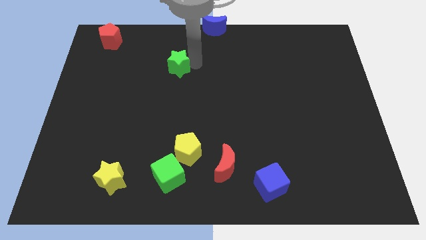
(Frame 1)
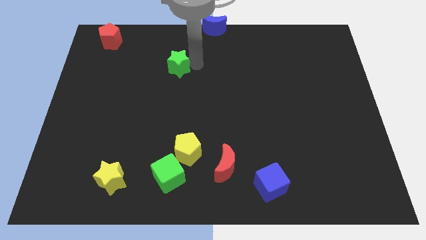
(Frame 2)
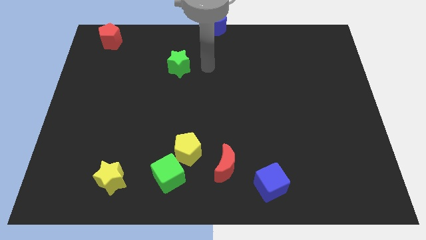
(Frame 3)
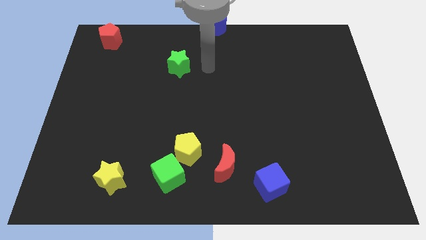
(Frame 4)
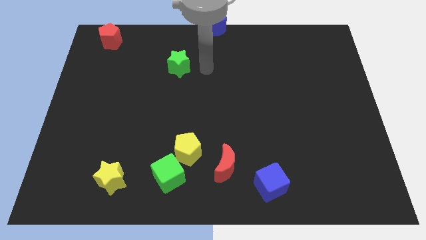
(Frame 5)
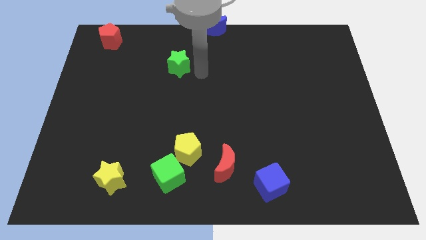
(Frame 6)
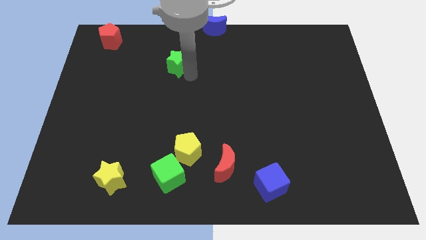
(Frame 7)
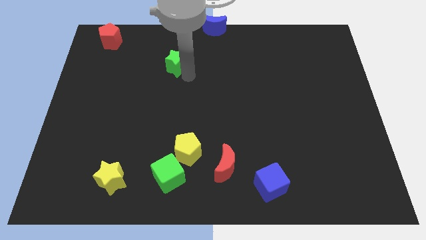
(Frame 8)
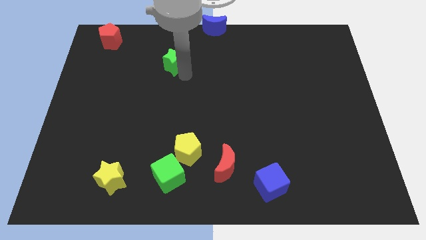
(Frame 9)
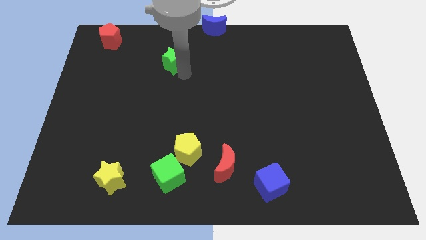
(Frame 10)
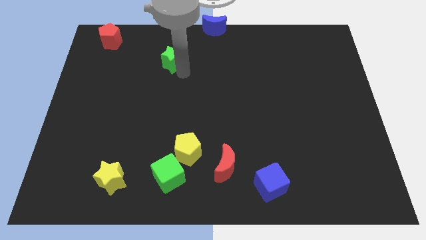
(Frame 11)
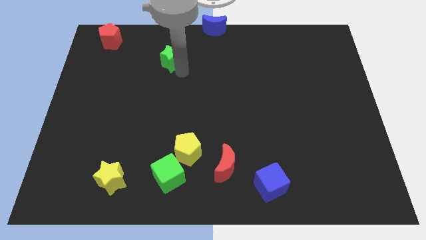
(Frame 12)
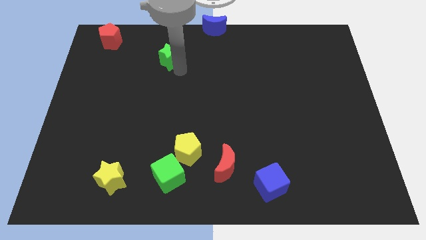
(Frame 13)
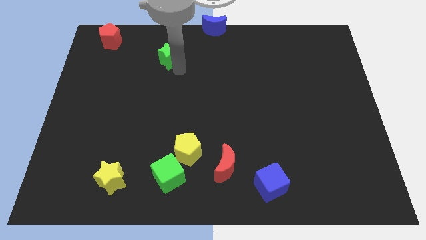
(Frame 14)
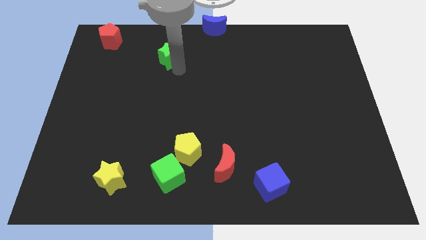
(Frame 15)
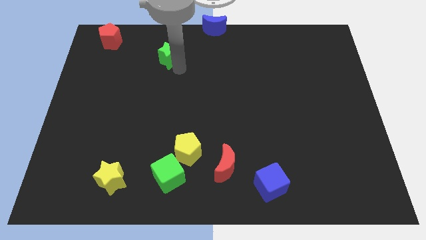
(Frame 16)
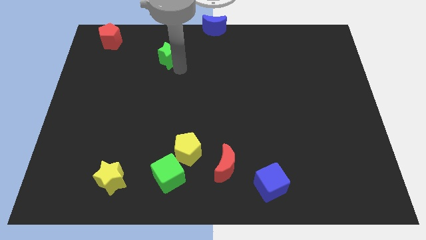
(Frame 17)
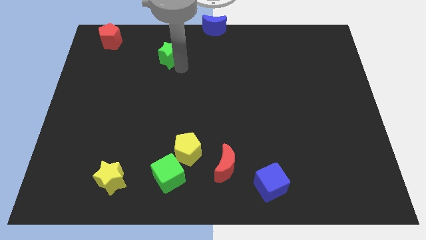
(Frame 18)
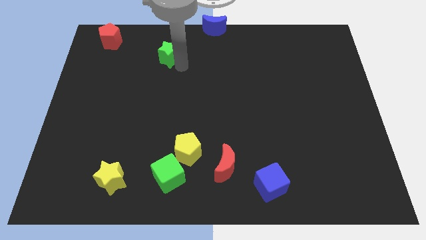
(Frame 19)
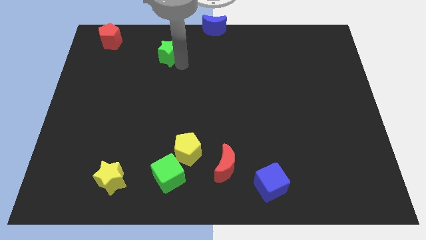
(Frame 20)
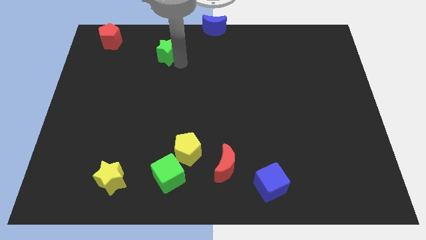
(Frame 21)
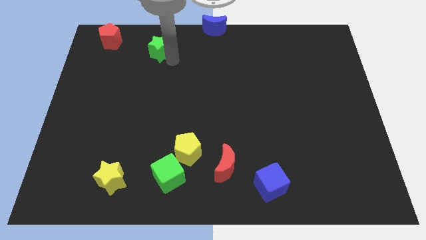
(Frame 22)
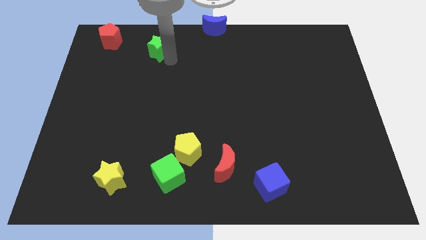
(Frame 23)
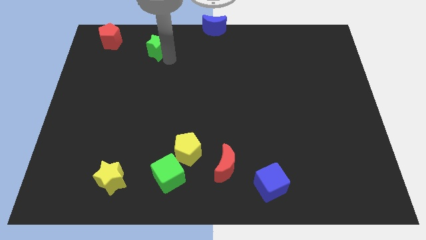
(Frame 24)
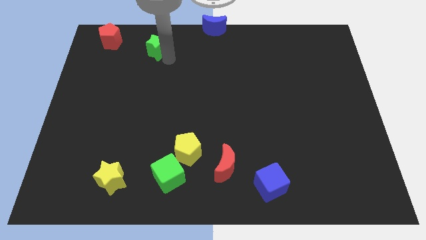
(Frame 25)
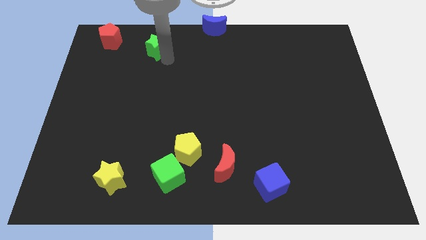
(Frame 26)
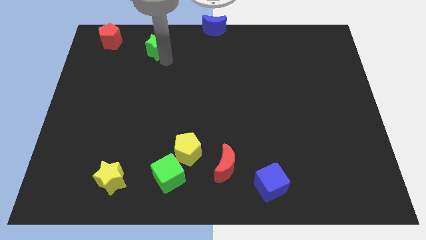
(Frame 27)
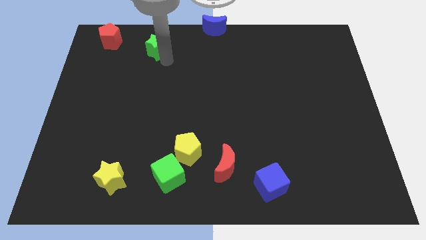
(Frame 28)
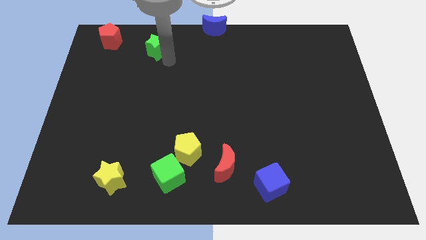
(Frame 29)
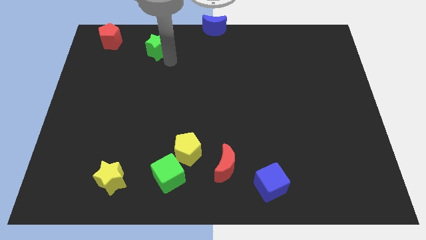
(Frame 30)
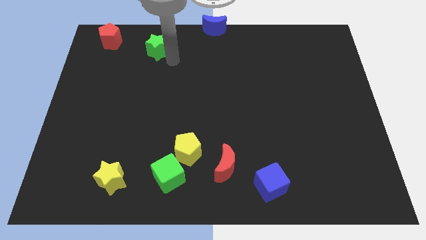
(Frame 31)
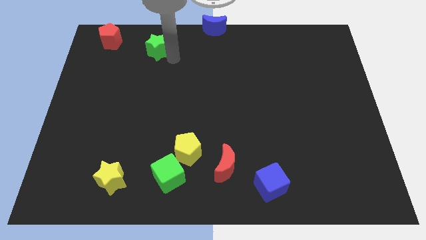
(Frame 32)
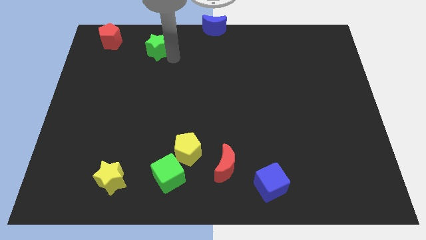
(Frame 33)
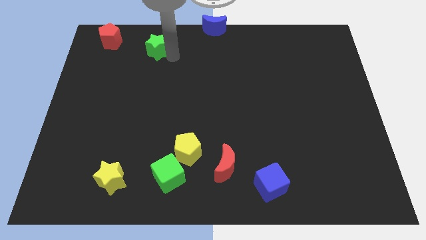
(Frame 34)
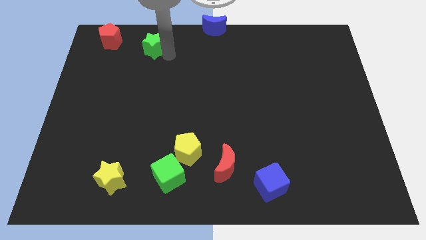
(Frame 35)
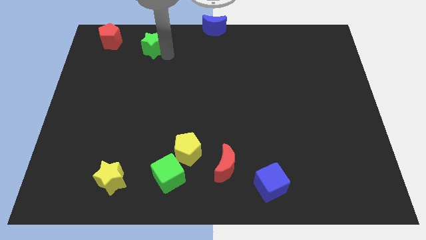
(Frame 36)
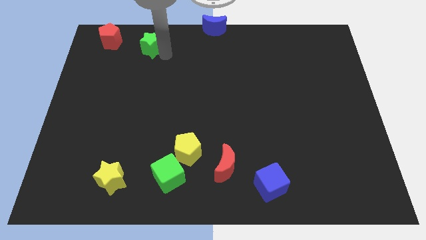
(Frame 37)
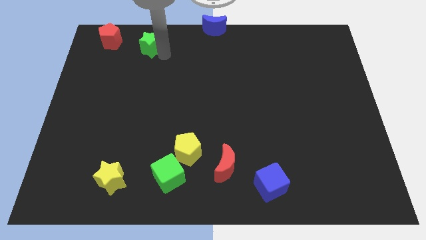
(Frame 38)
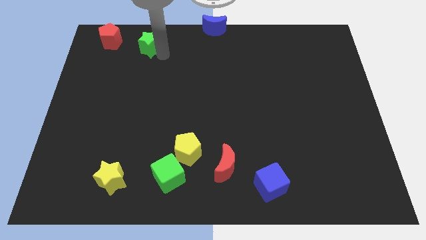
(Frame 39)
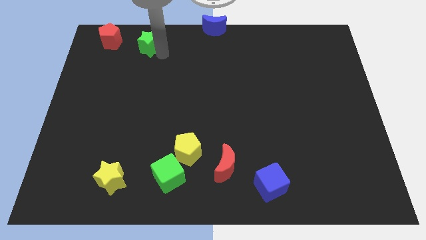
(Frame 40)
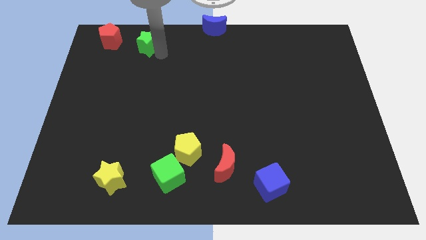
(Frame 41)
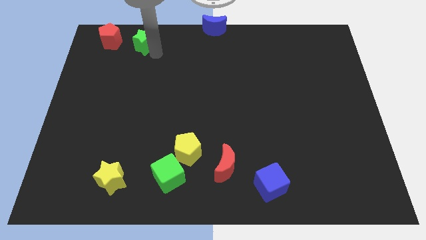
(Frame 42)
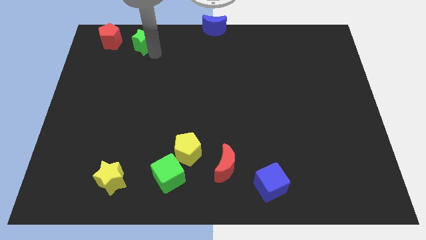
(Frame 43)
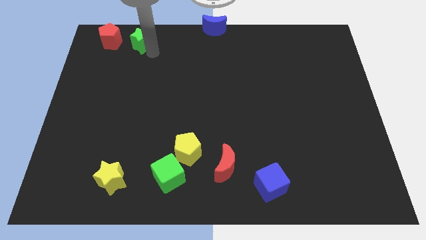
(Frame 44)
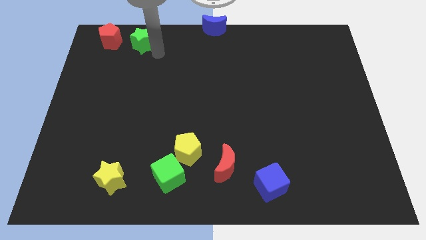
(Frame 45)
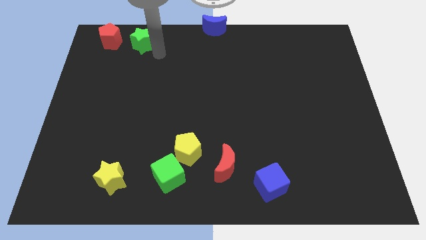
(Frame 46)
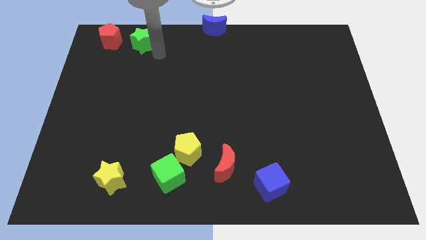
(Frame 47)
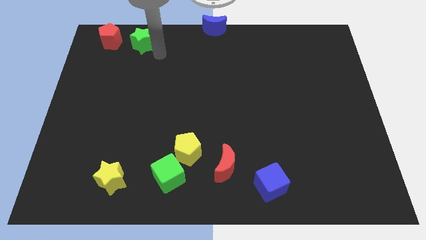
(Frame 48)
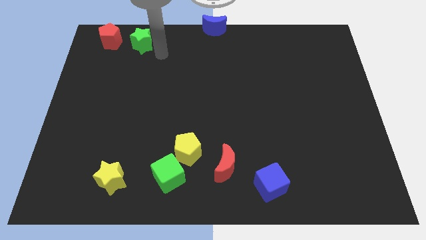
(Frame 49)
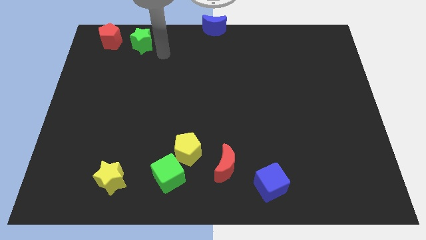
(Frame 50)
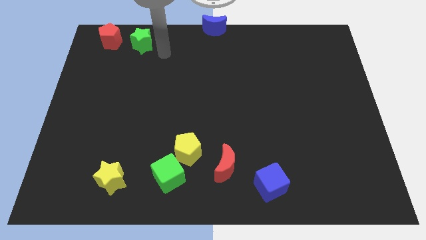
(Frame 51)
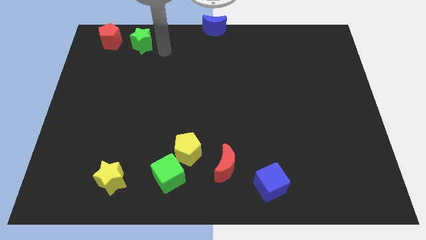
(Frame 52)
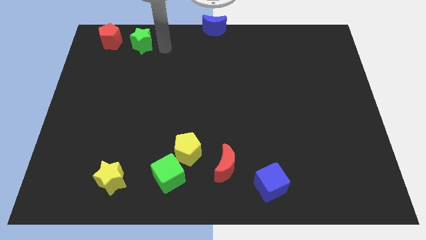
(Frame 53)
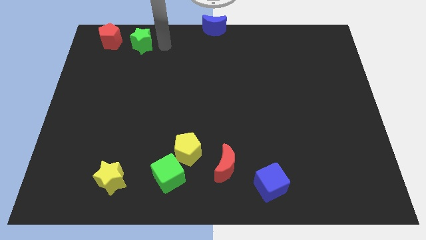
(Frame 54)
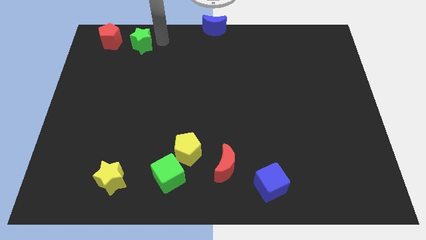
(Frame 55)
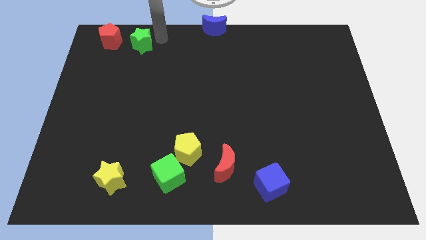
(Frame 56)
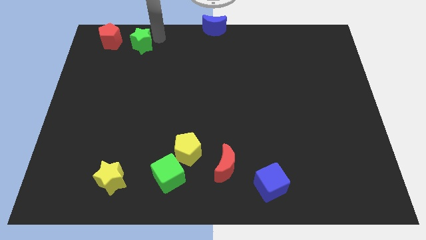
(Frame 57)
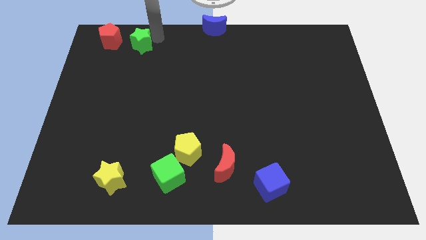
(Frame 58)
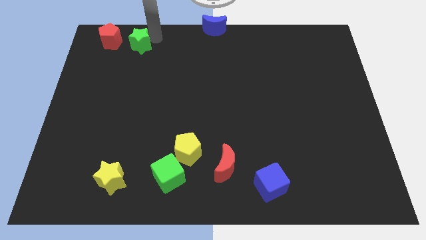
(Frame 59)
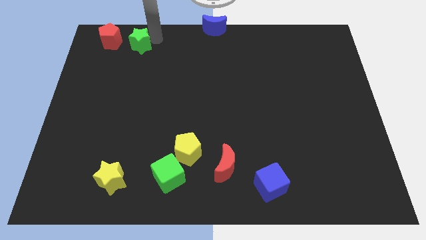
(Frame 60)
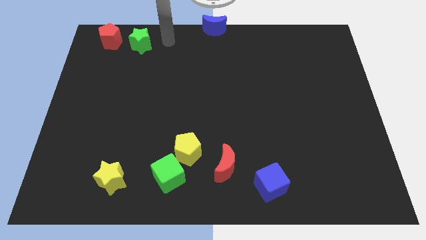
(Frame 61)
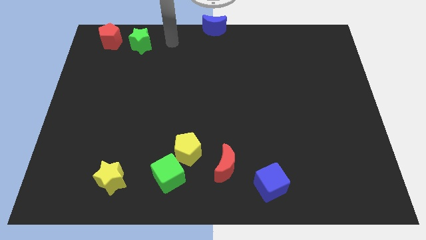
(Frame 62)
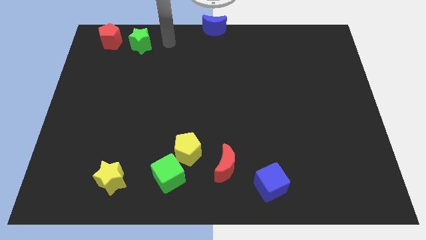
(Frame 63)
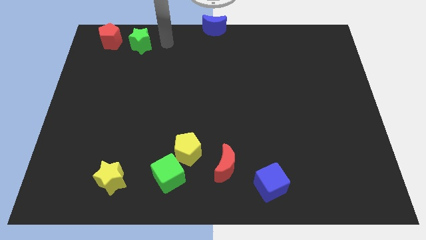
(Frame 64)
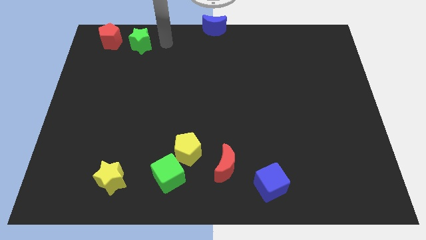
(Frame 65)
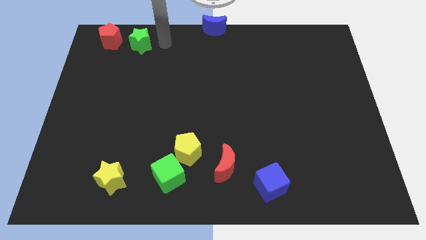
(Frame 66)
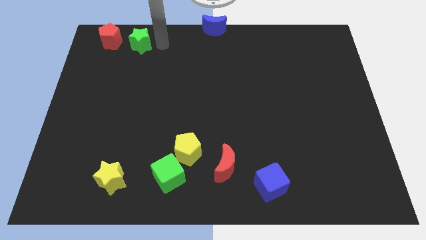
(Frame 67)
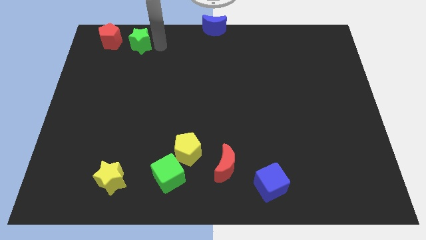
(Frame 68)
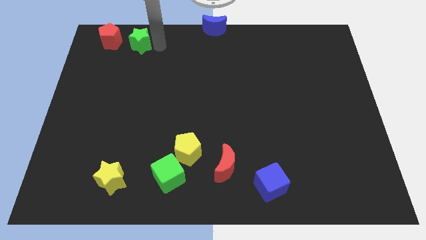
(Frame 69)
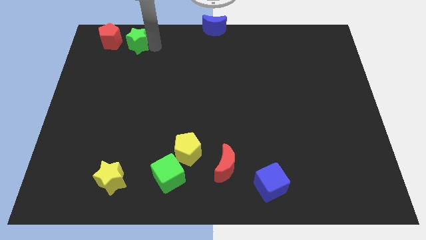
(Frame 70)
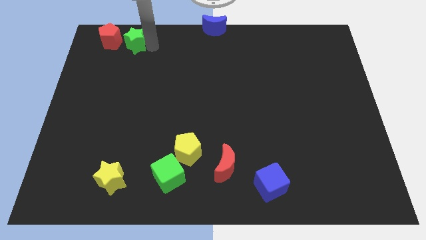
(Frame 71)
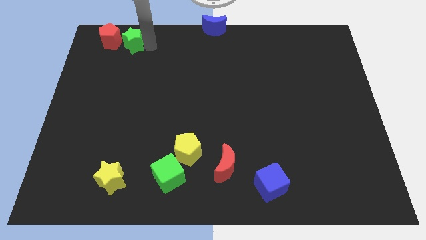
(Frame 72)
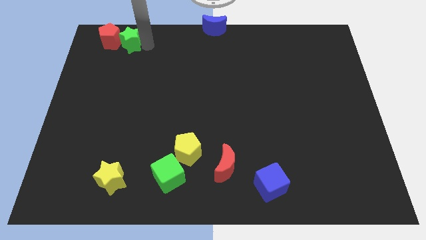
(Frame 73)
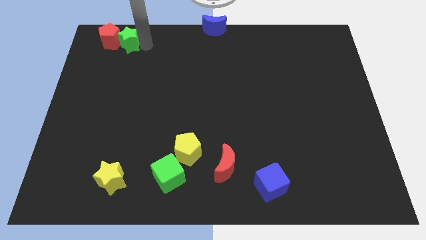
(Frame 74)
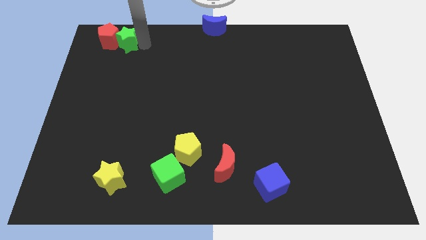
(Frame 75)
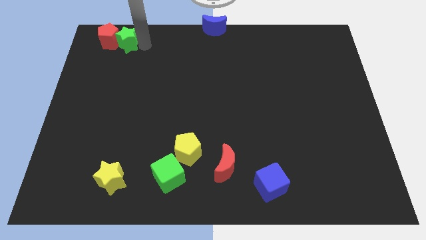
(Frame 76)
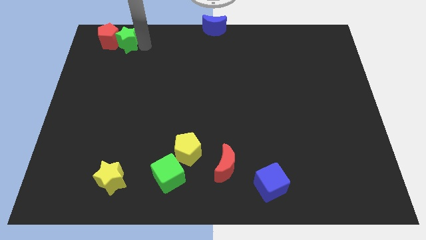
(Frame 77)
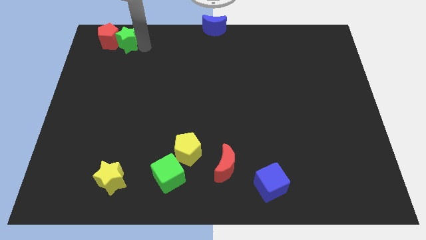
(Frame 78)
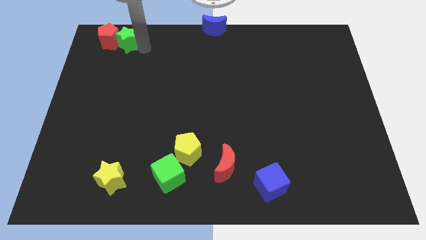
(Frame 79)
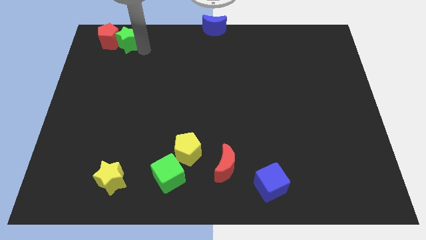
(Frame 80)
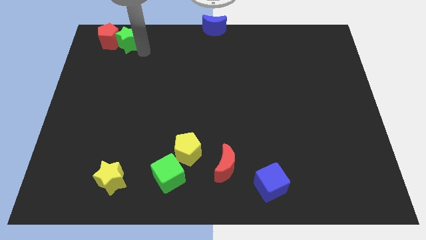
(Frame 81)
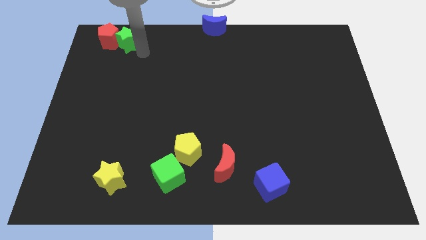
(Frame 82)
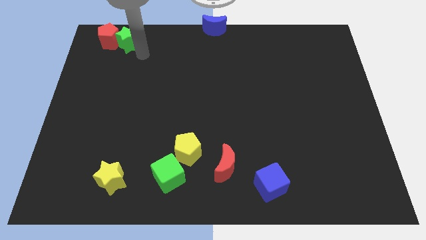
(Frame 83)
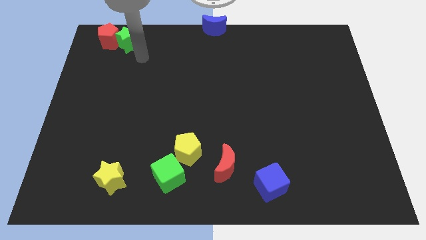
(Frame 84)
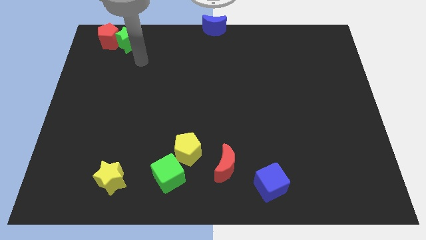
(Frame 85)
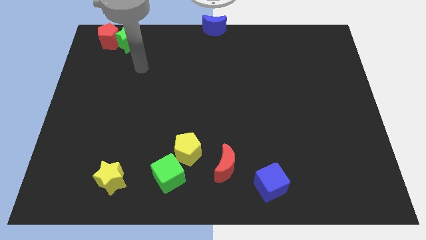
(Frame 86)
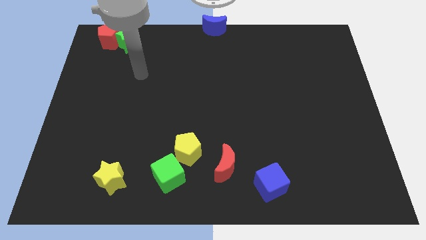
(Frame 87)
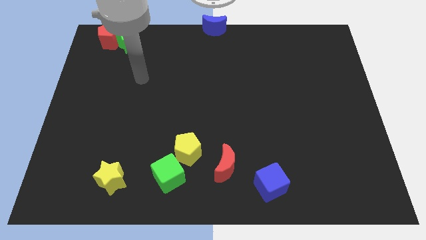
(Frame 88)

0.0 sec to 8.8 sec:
push the green star into the red moon
